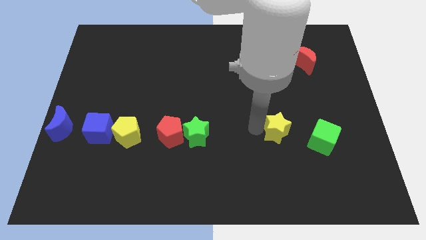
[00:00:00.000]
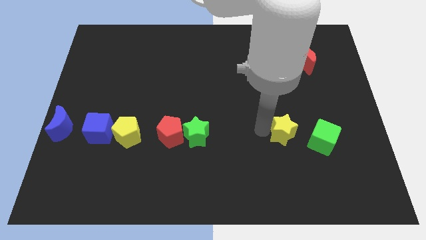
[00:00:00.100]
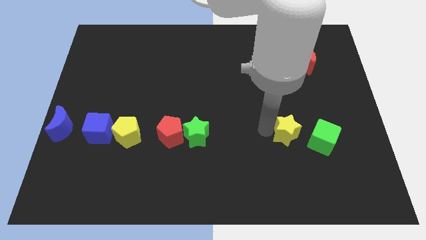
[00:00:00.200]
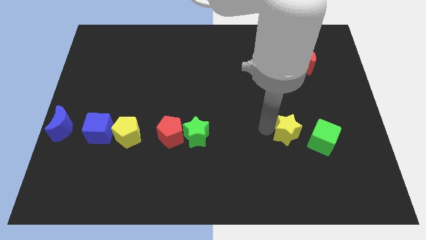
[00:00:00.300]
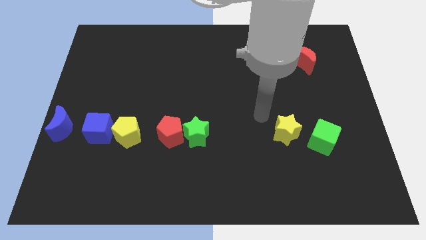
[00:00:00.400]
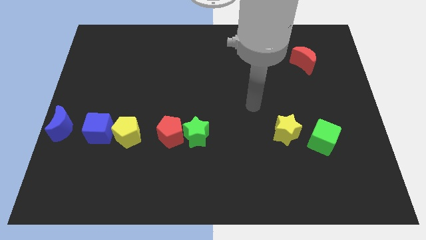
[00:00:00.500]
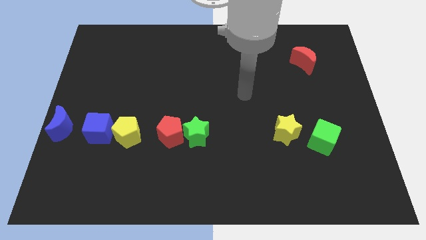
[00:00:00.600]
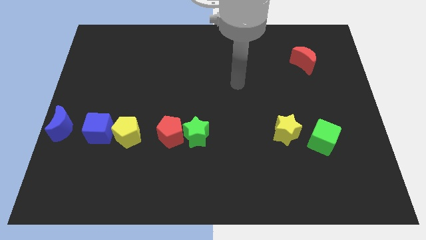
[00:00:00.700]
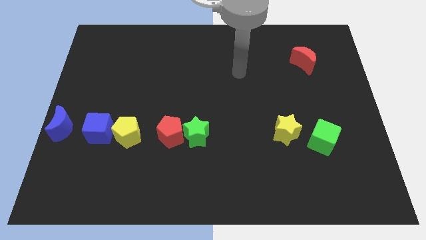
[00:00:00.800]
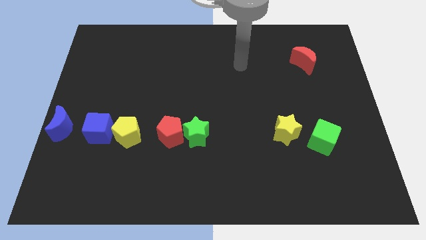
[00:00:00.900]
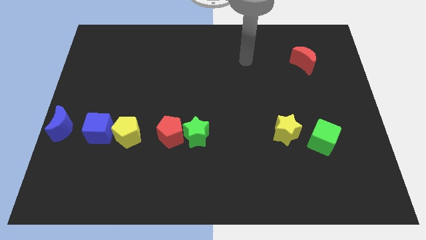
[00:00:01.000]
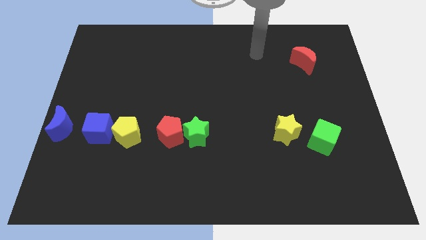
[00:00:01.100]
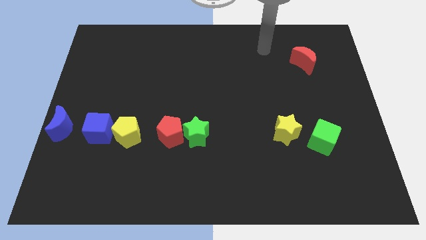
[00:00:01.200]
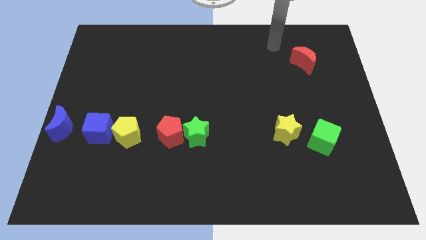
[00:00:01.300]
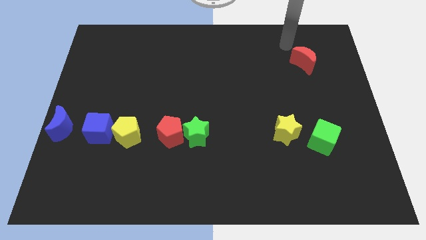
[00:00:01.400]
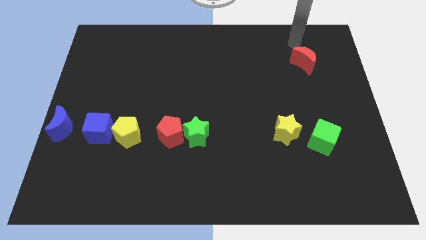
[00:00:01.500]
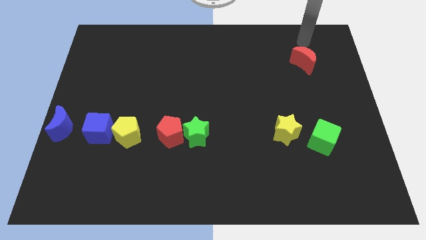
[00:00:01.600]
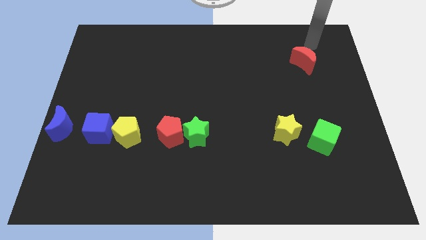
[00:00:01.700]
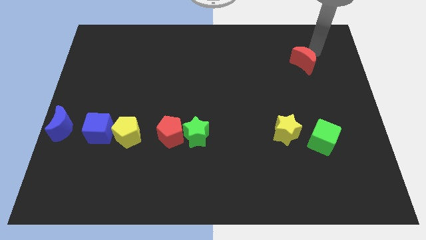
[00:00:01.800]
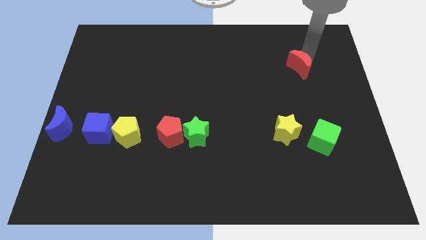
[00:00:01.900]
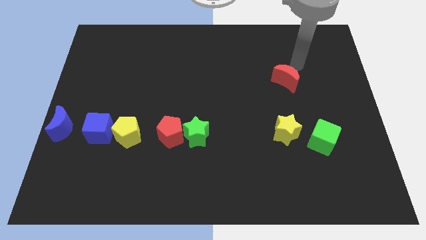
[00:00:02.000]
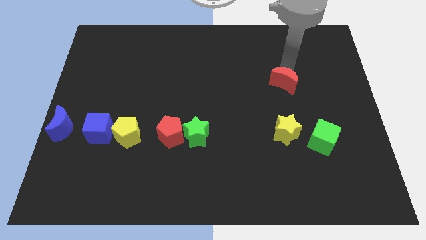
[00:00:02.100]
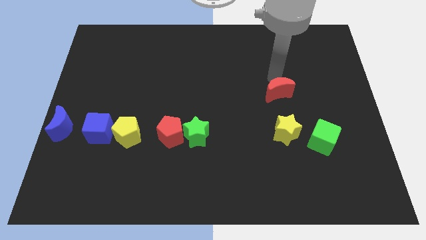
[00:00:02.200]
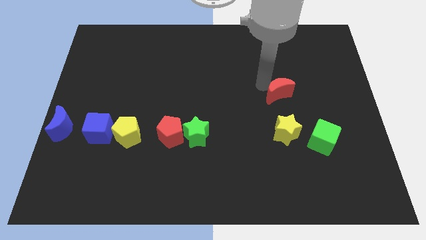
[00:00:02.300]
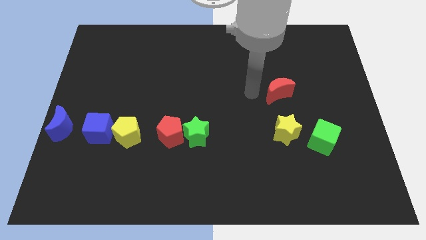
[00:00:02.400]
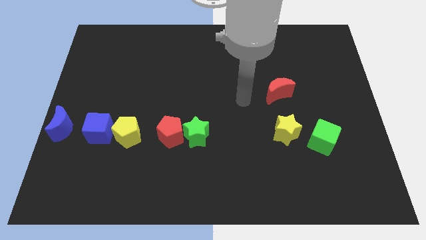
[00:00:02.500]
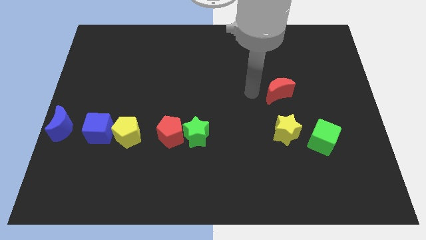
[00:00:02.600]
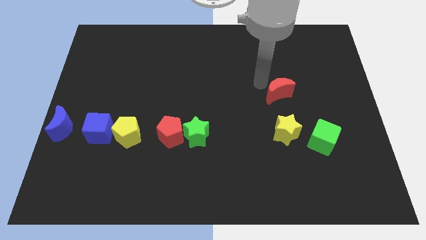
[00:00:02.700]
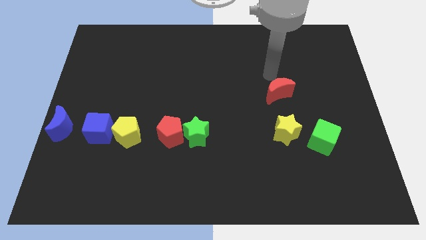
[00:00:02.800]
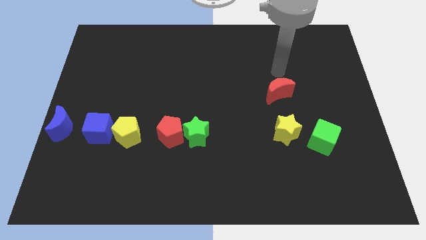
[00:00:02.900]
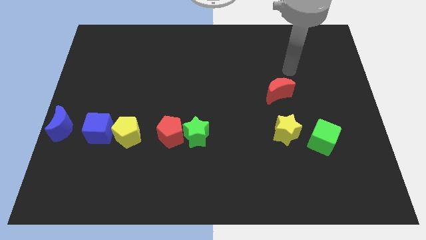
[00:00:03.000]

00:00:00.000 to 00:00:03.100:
move the red moon above the yellow star

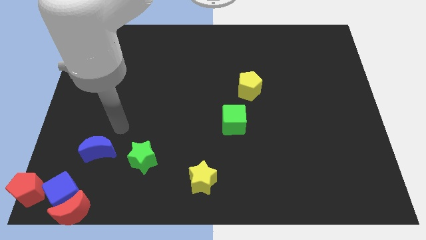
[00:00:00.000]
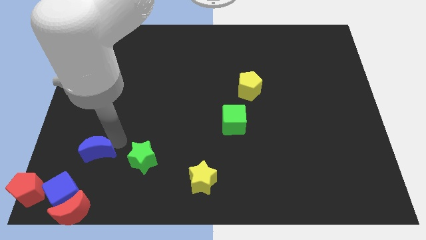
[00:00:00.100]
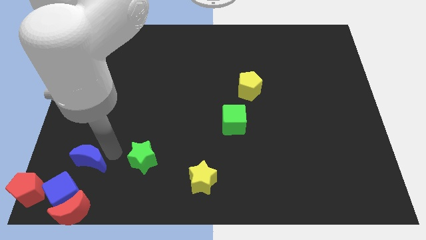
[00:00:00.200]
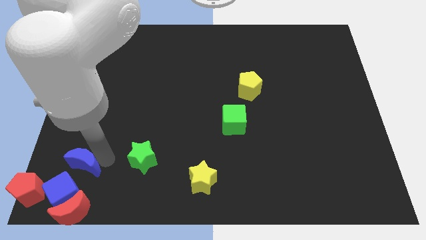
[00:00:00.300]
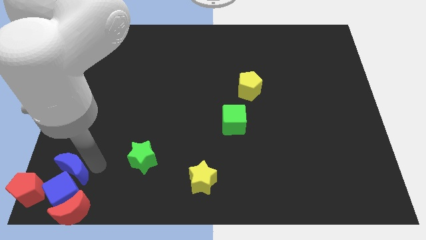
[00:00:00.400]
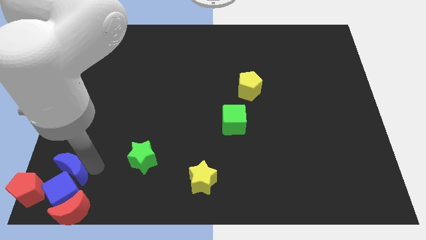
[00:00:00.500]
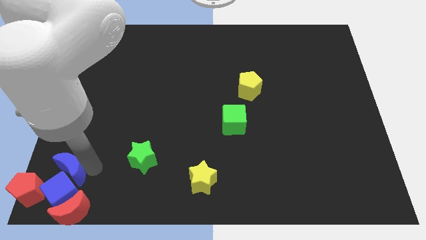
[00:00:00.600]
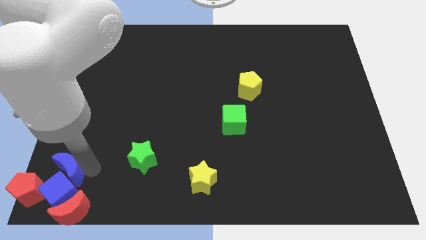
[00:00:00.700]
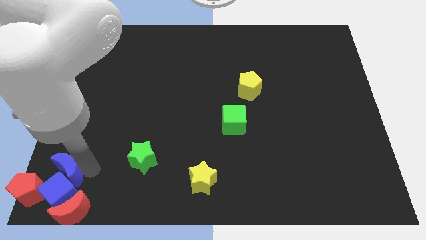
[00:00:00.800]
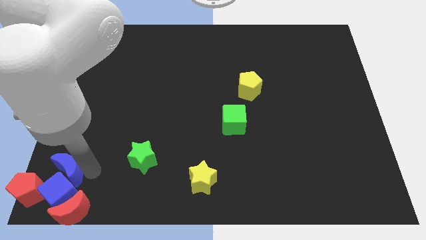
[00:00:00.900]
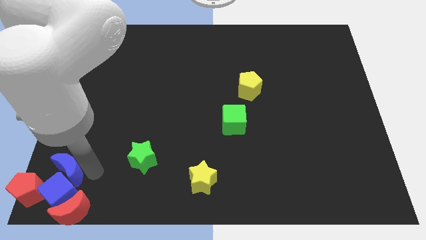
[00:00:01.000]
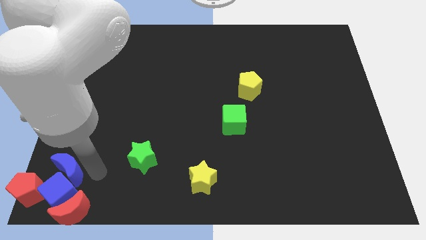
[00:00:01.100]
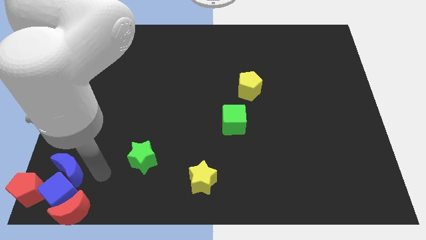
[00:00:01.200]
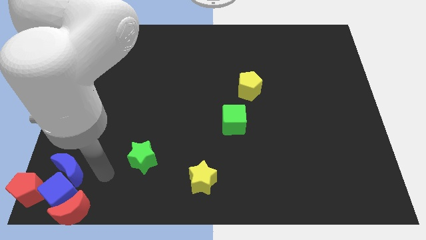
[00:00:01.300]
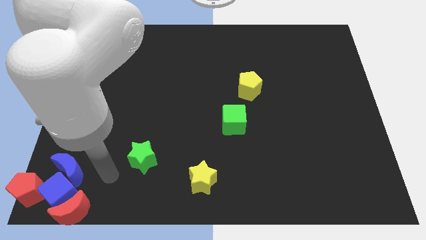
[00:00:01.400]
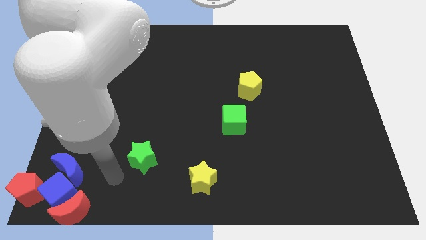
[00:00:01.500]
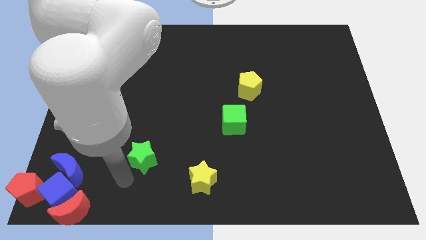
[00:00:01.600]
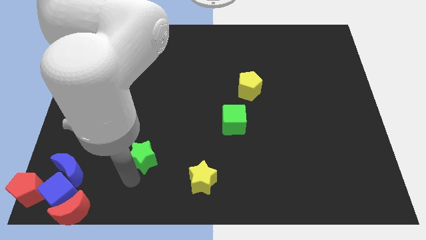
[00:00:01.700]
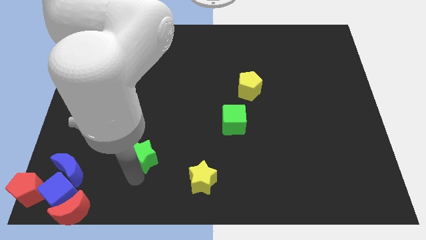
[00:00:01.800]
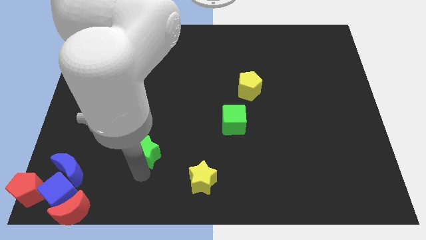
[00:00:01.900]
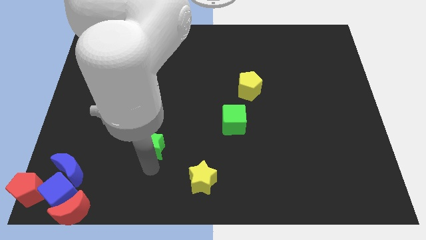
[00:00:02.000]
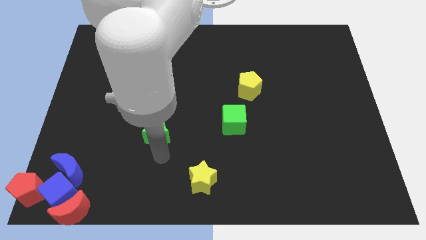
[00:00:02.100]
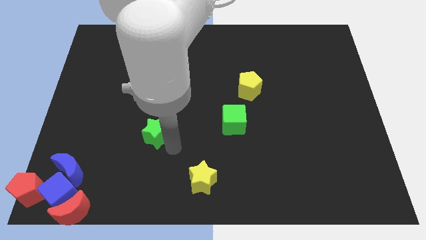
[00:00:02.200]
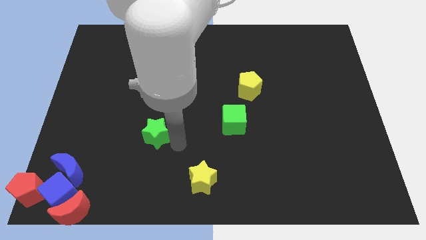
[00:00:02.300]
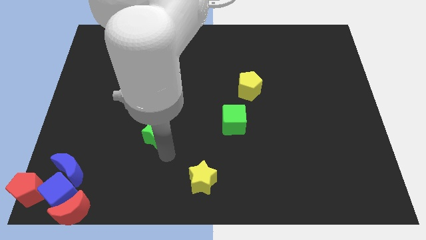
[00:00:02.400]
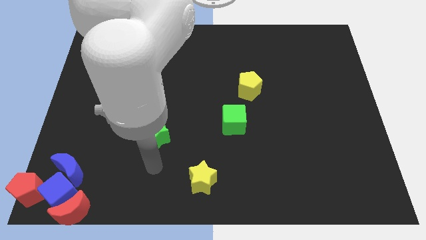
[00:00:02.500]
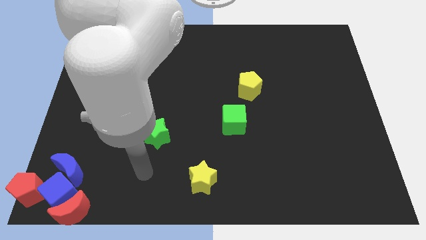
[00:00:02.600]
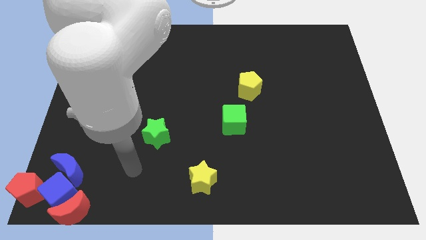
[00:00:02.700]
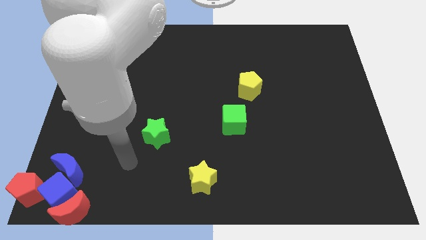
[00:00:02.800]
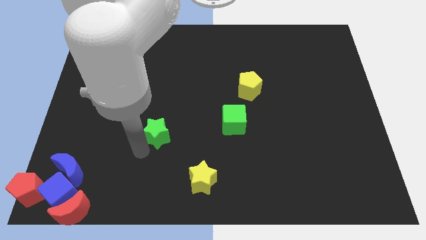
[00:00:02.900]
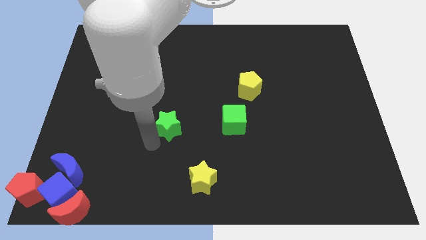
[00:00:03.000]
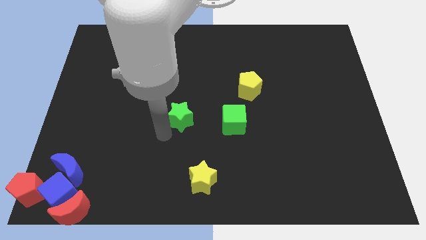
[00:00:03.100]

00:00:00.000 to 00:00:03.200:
place the green star parallel to green cube

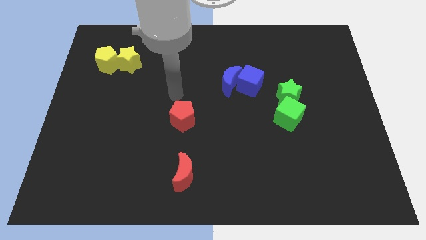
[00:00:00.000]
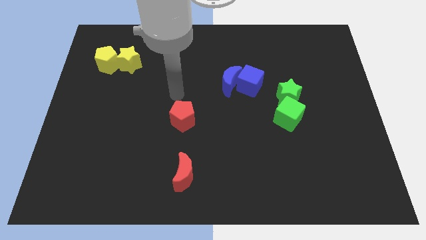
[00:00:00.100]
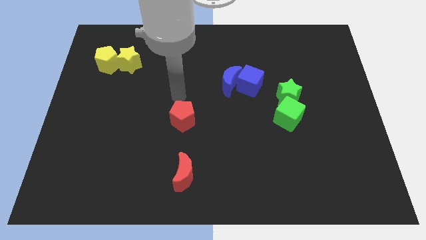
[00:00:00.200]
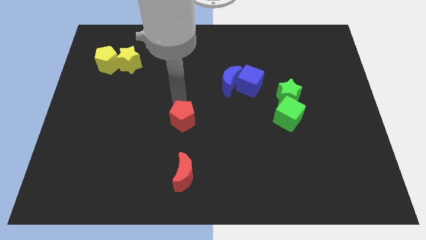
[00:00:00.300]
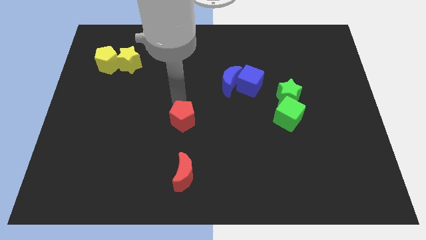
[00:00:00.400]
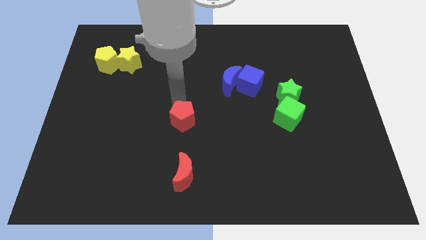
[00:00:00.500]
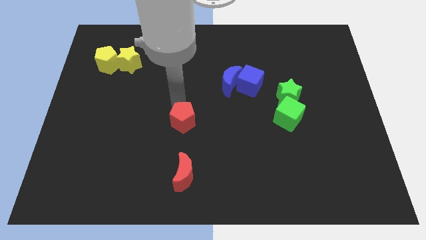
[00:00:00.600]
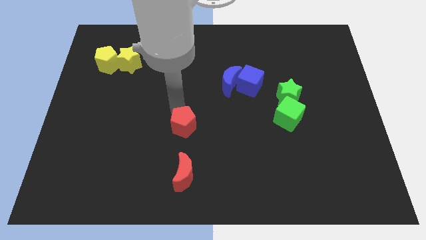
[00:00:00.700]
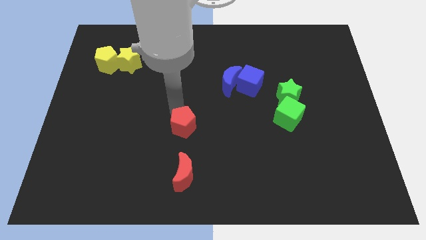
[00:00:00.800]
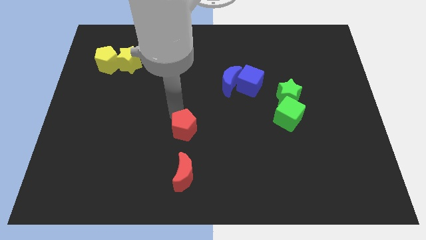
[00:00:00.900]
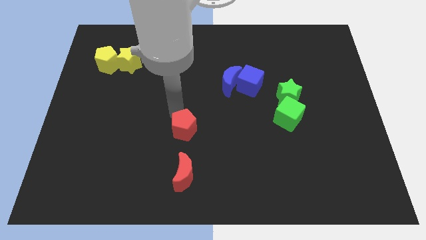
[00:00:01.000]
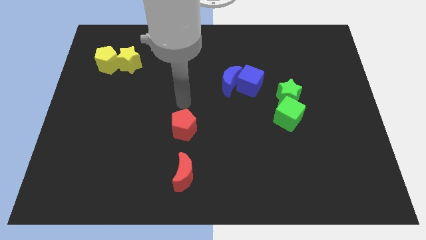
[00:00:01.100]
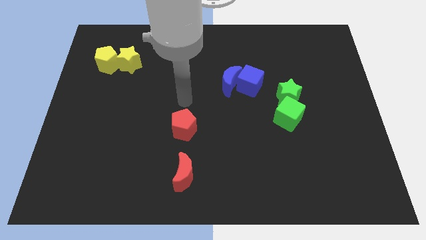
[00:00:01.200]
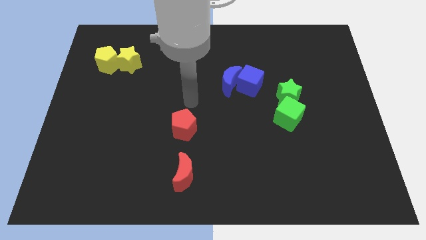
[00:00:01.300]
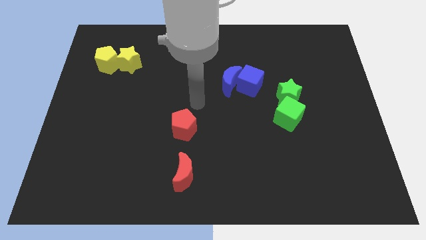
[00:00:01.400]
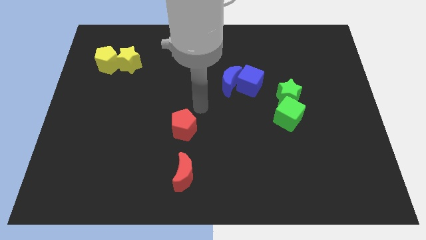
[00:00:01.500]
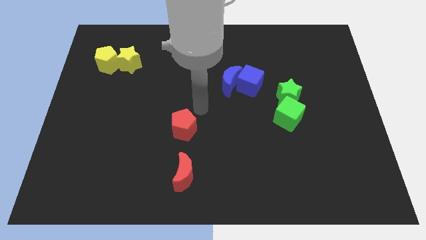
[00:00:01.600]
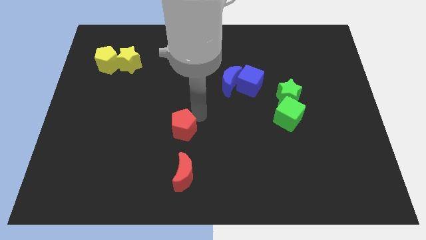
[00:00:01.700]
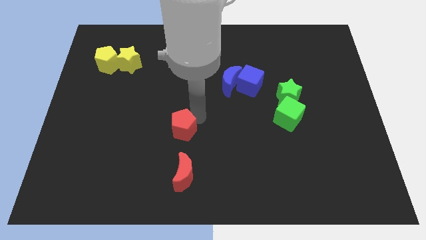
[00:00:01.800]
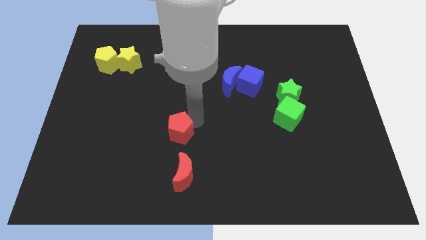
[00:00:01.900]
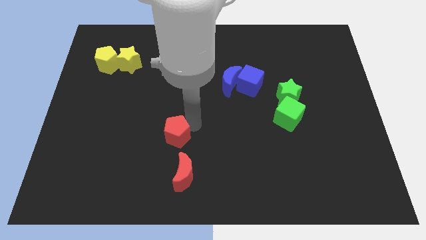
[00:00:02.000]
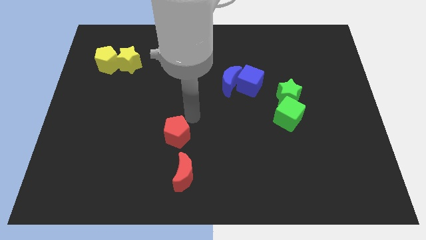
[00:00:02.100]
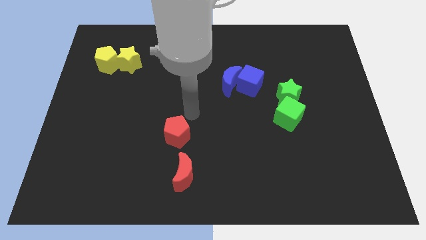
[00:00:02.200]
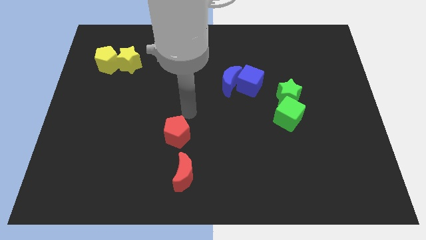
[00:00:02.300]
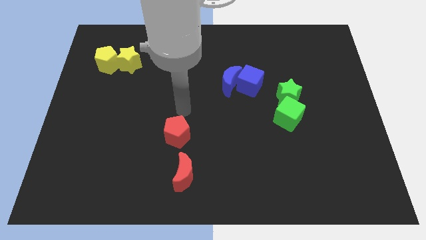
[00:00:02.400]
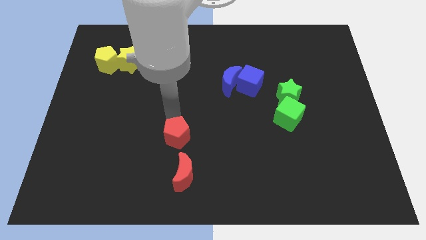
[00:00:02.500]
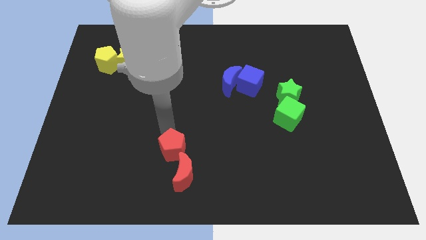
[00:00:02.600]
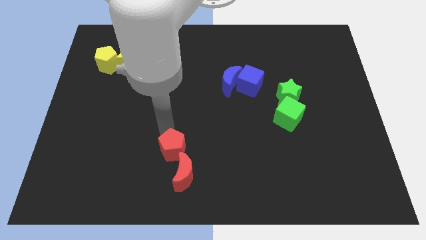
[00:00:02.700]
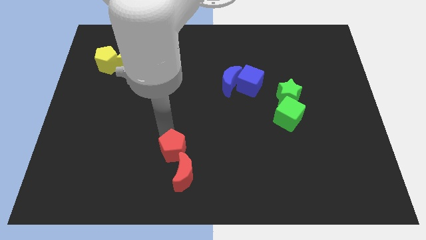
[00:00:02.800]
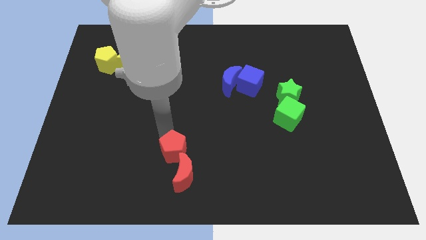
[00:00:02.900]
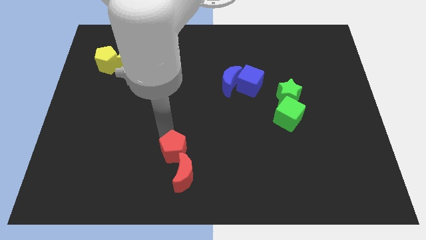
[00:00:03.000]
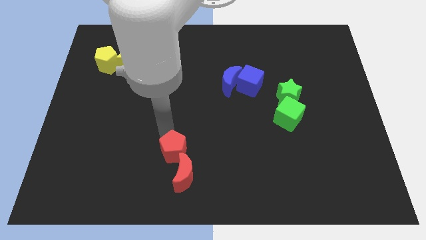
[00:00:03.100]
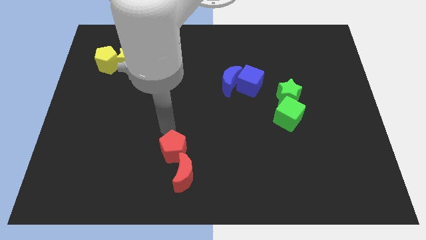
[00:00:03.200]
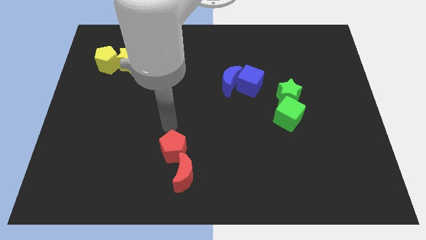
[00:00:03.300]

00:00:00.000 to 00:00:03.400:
move the red pentagon to the top left to the red crescent
